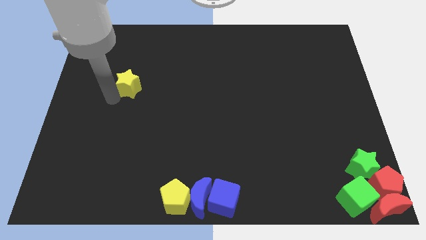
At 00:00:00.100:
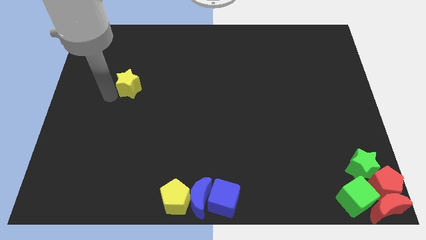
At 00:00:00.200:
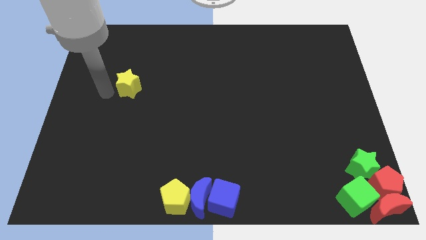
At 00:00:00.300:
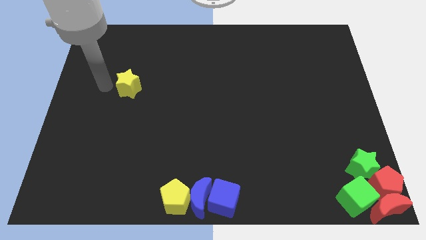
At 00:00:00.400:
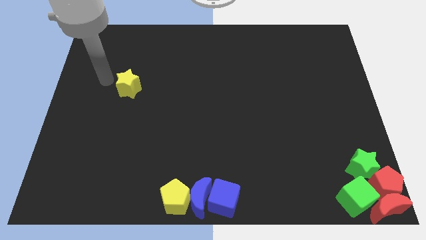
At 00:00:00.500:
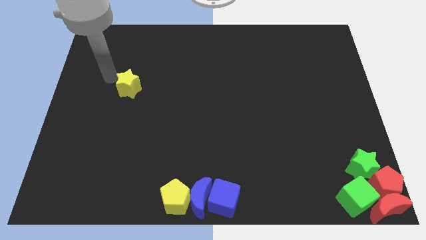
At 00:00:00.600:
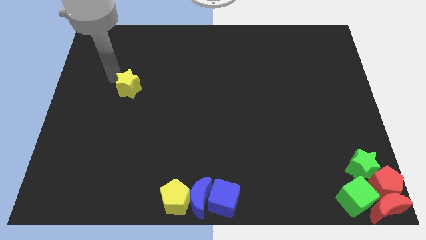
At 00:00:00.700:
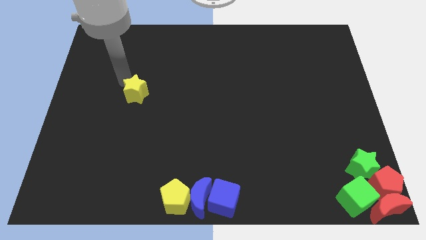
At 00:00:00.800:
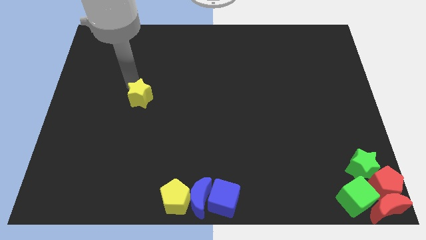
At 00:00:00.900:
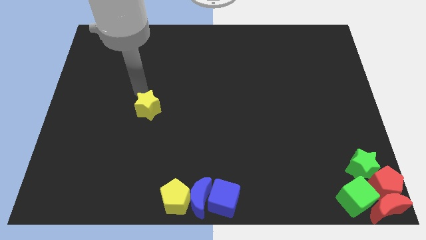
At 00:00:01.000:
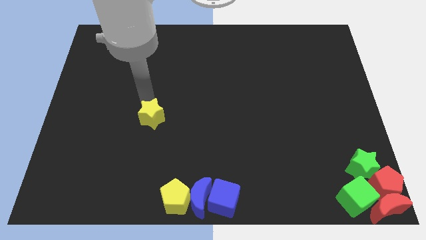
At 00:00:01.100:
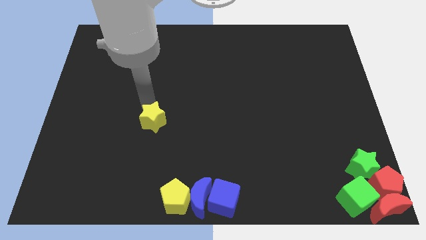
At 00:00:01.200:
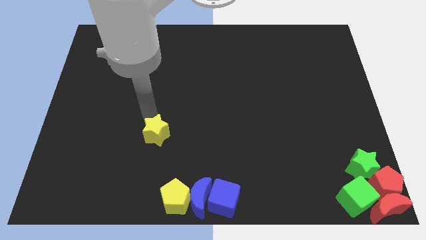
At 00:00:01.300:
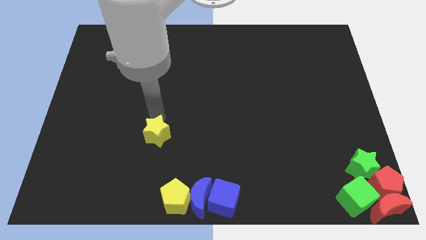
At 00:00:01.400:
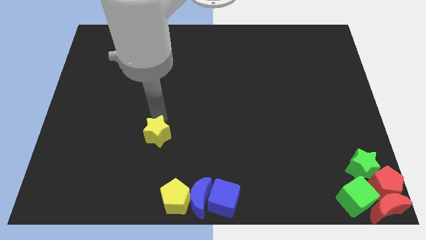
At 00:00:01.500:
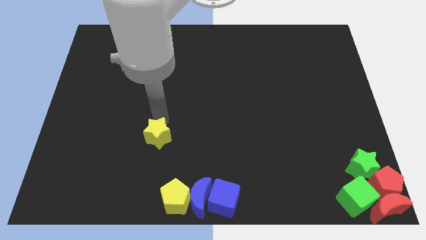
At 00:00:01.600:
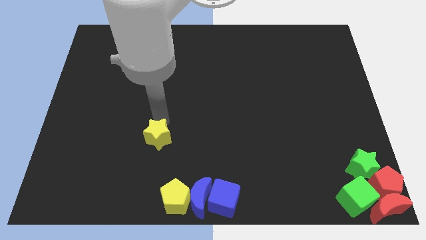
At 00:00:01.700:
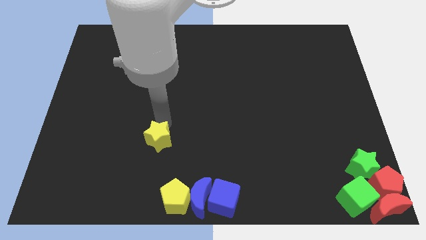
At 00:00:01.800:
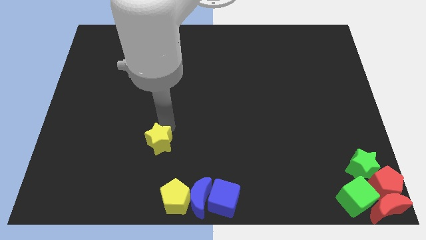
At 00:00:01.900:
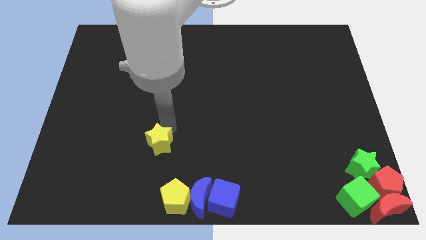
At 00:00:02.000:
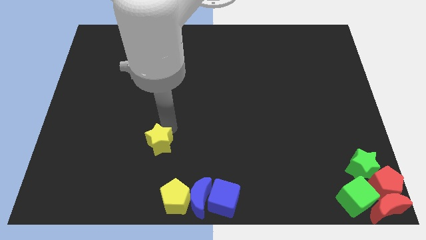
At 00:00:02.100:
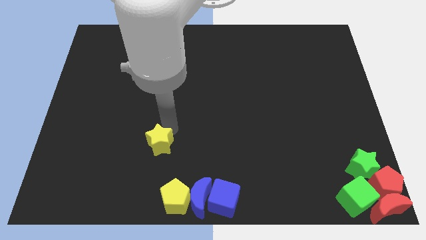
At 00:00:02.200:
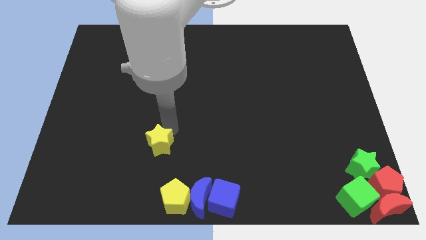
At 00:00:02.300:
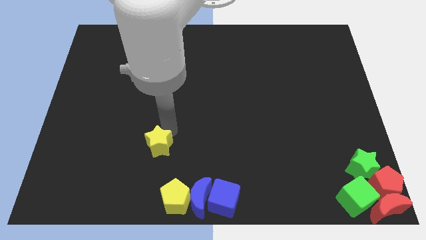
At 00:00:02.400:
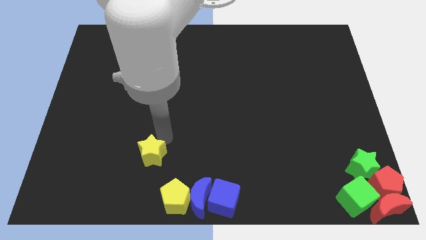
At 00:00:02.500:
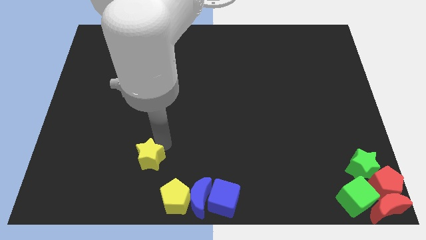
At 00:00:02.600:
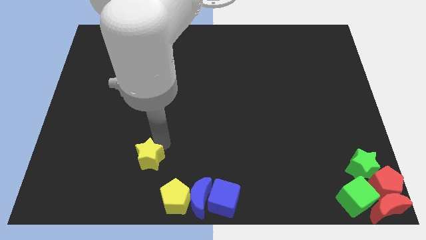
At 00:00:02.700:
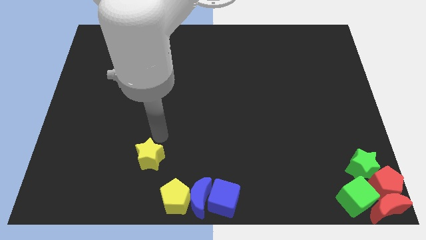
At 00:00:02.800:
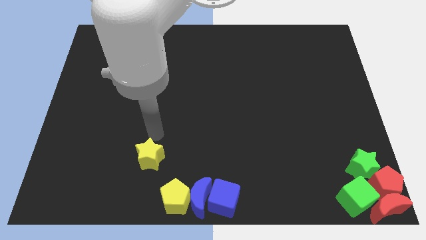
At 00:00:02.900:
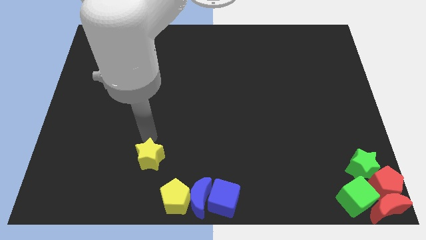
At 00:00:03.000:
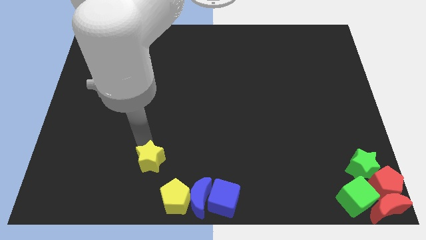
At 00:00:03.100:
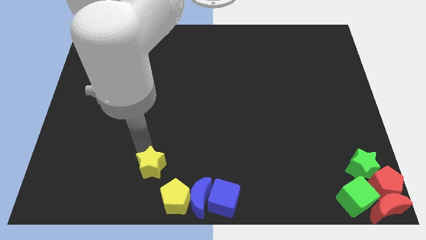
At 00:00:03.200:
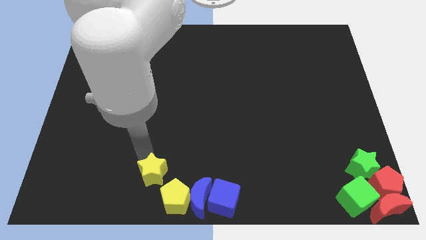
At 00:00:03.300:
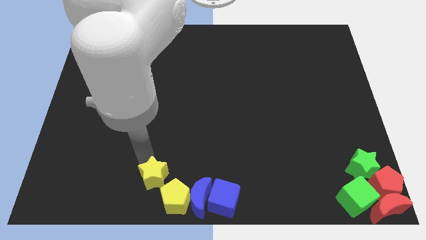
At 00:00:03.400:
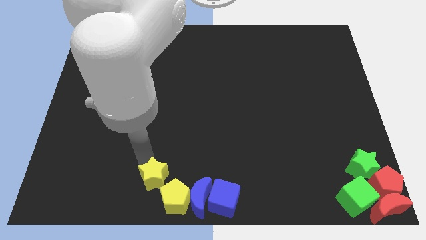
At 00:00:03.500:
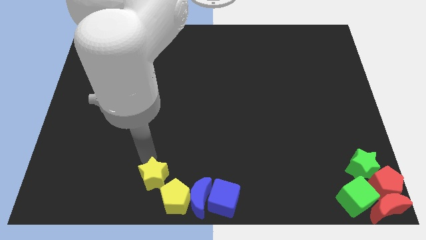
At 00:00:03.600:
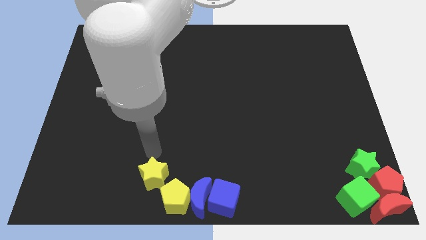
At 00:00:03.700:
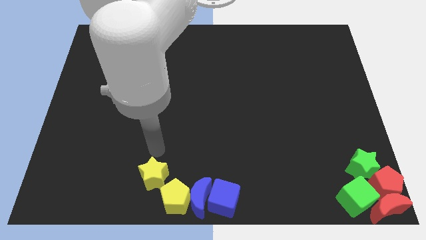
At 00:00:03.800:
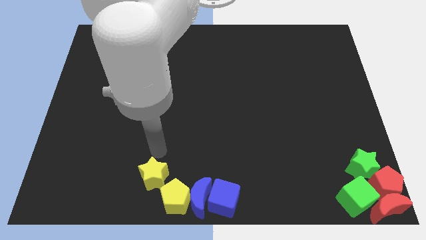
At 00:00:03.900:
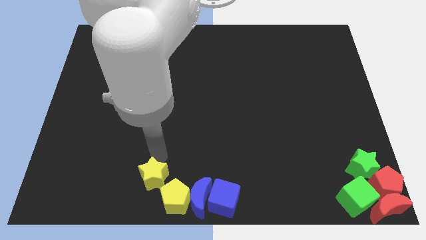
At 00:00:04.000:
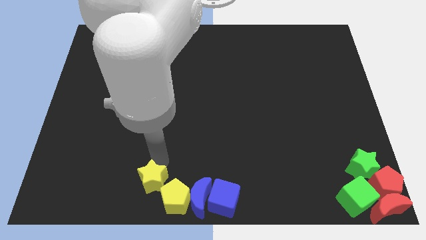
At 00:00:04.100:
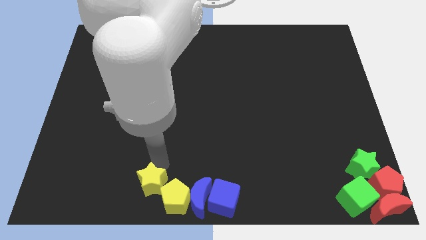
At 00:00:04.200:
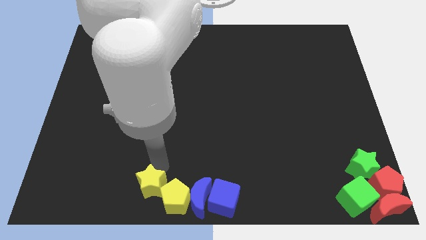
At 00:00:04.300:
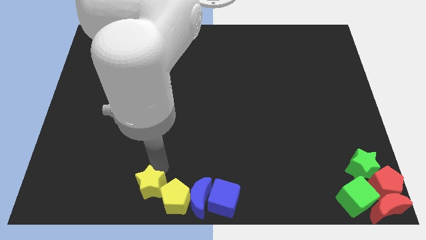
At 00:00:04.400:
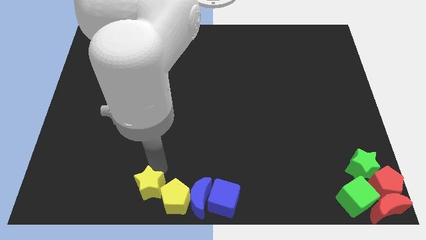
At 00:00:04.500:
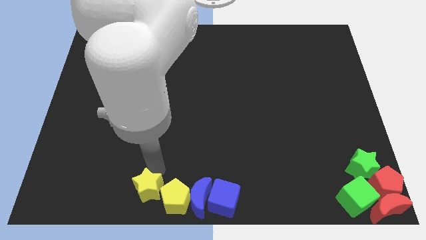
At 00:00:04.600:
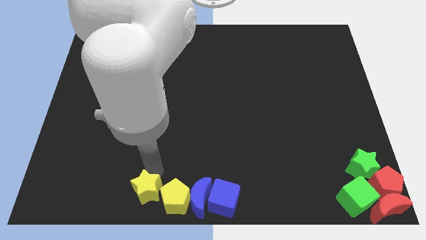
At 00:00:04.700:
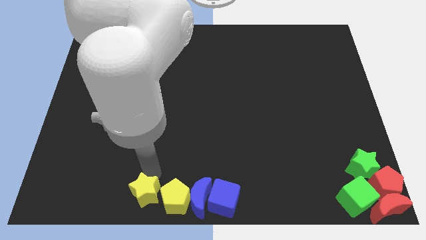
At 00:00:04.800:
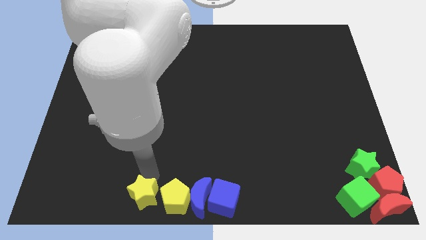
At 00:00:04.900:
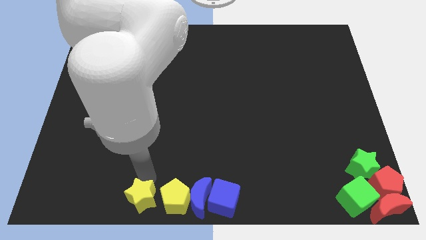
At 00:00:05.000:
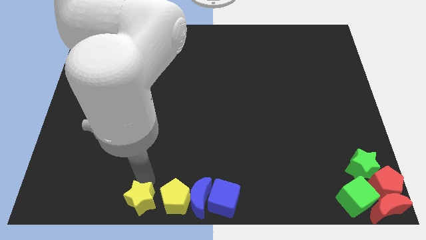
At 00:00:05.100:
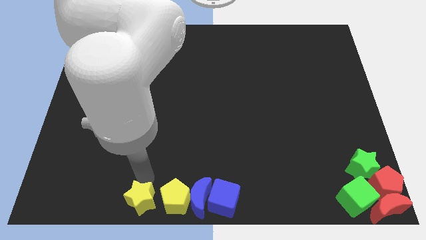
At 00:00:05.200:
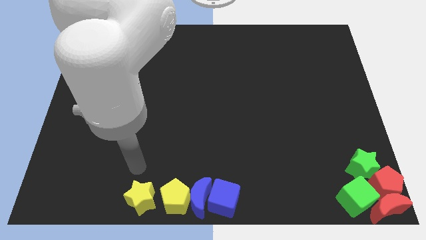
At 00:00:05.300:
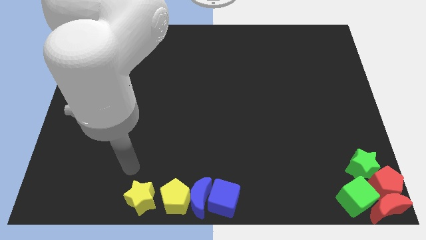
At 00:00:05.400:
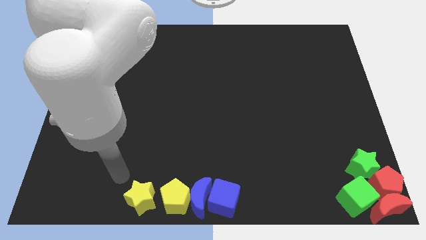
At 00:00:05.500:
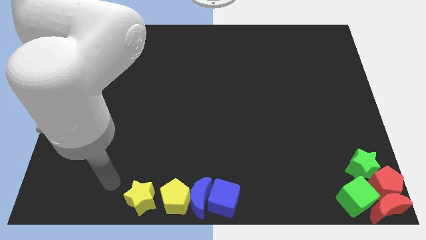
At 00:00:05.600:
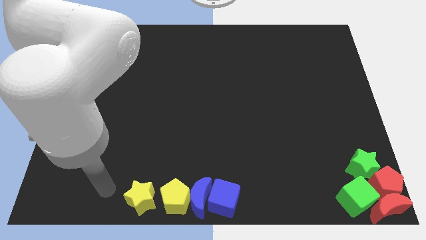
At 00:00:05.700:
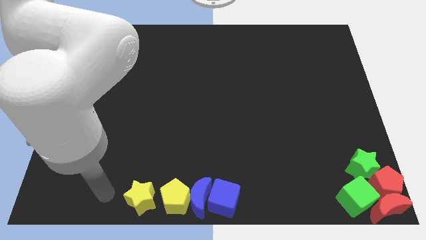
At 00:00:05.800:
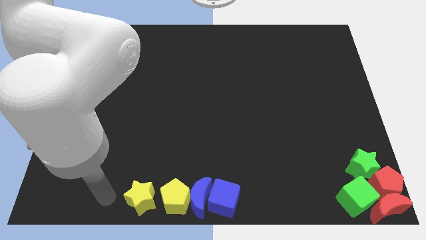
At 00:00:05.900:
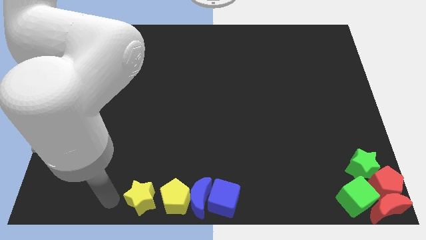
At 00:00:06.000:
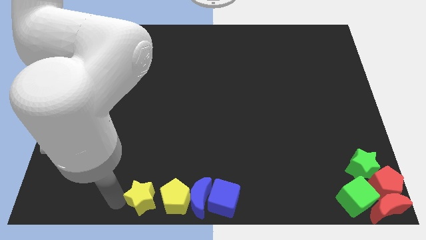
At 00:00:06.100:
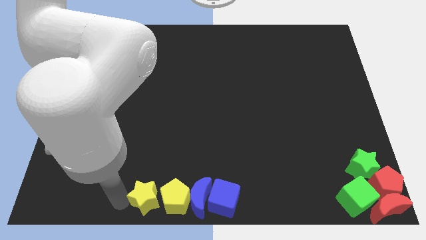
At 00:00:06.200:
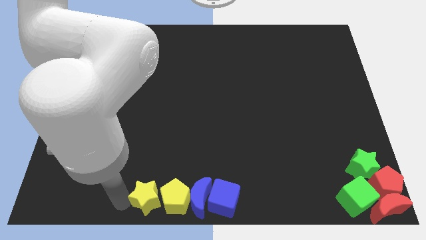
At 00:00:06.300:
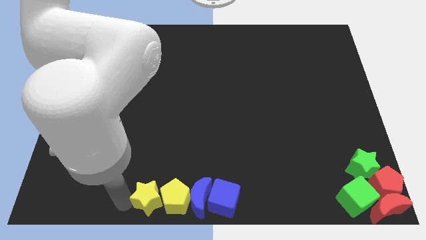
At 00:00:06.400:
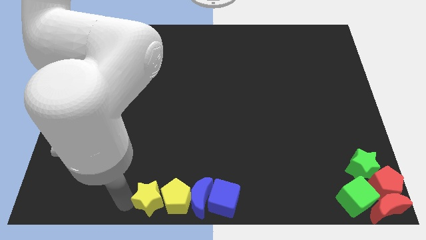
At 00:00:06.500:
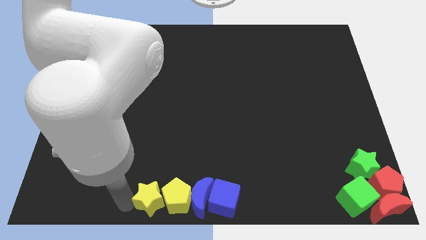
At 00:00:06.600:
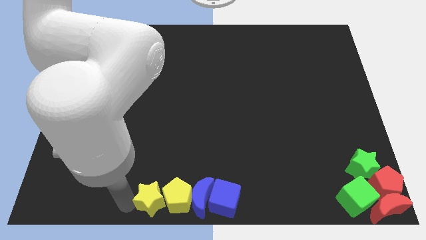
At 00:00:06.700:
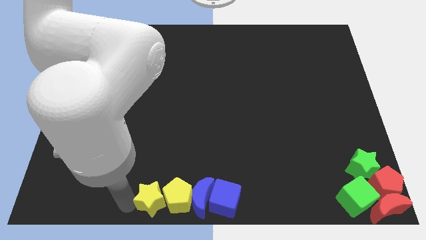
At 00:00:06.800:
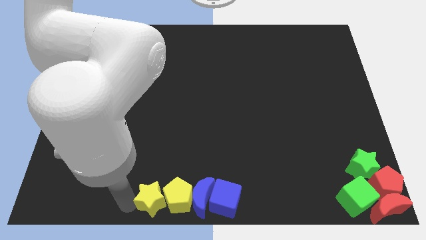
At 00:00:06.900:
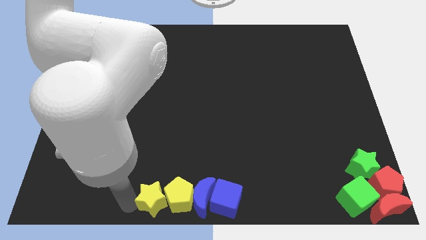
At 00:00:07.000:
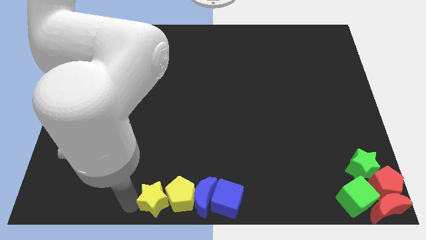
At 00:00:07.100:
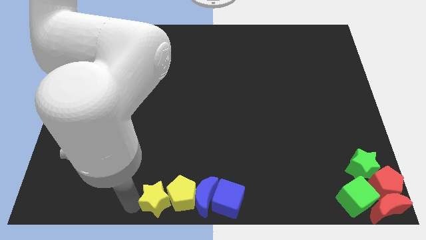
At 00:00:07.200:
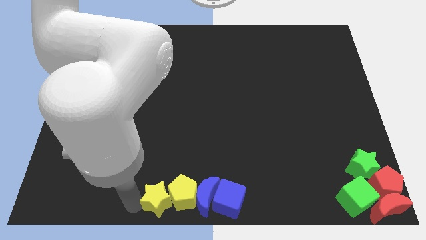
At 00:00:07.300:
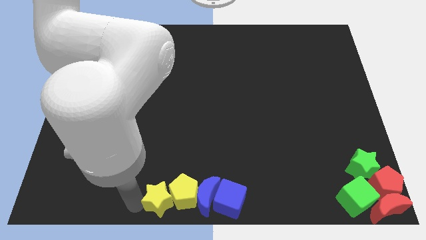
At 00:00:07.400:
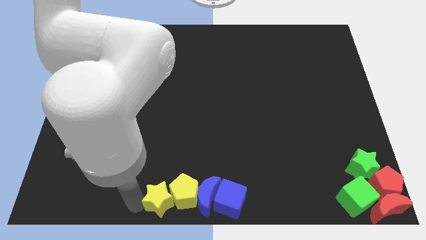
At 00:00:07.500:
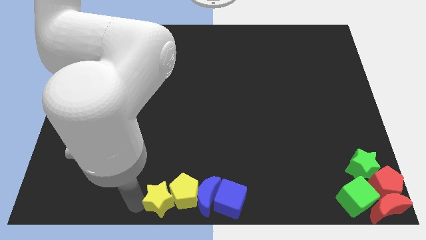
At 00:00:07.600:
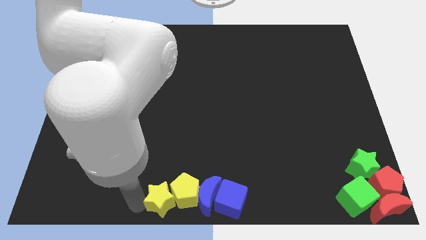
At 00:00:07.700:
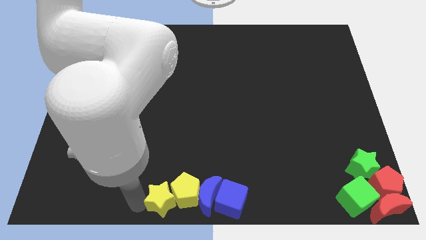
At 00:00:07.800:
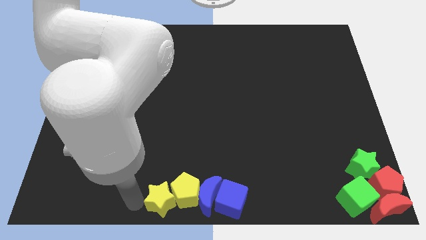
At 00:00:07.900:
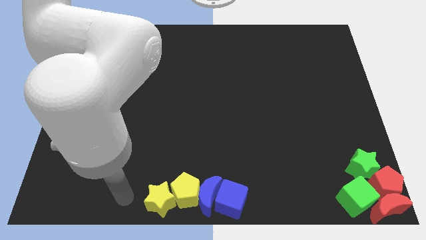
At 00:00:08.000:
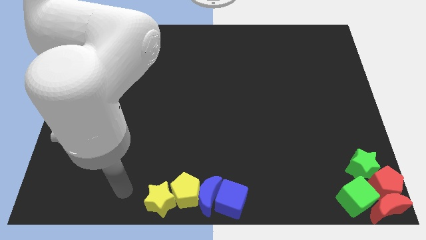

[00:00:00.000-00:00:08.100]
push the yellow star into the yellow pentagon

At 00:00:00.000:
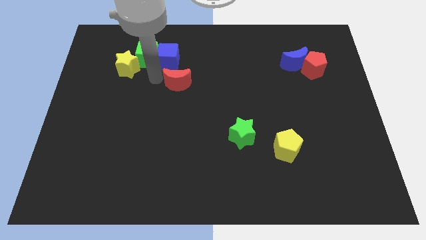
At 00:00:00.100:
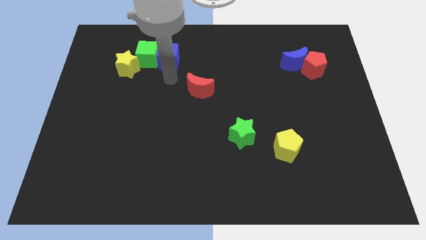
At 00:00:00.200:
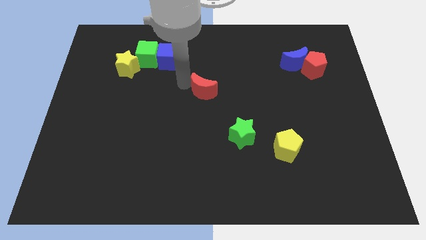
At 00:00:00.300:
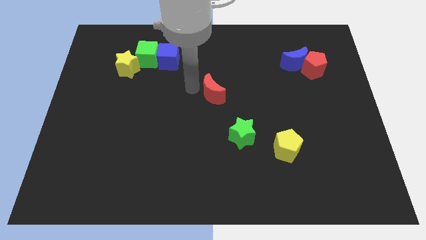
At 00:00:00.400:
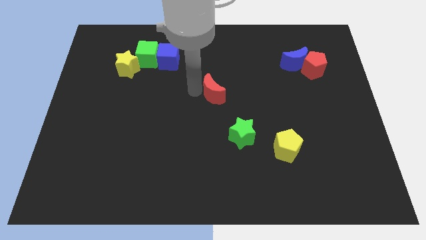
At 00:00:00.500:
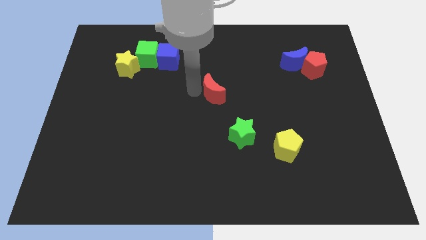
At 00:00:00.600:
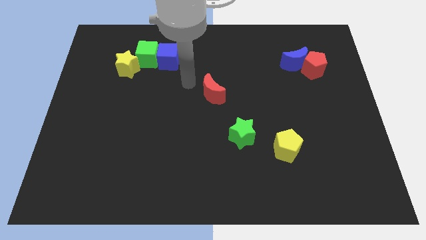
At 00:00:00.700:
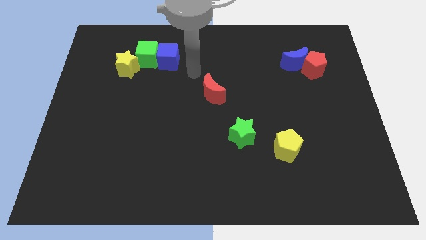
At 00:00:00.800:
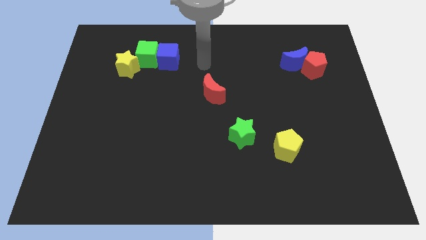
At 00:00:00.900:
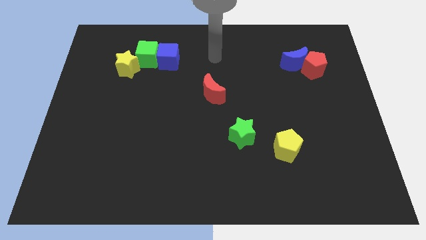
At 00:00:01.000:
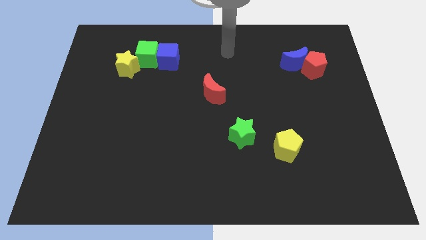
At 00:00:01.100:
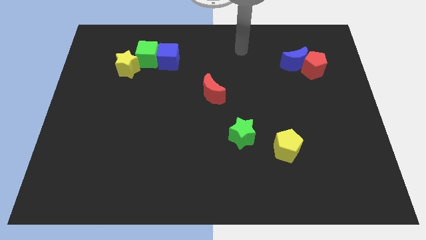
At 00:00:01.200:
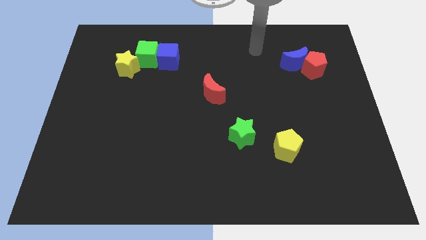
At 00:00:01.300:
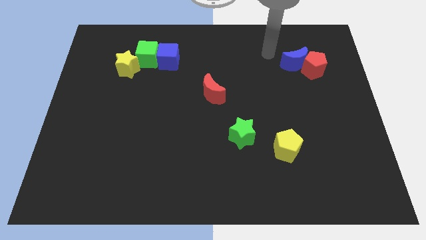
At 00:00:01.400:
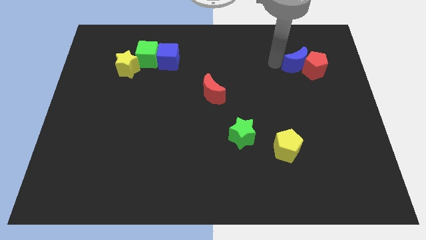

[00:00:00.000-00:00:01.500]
move red moon diagonally to the green star
